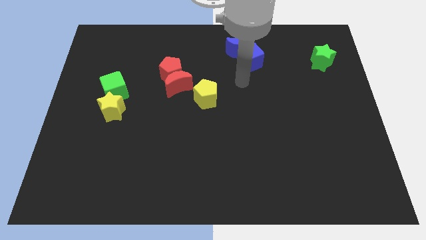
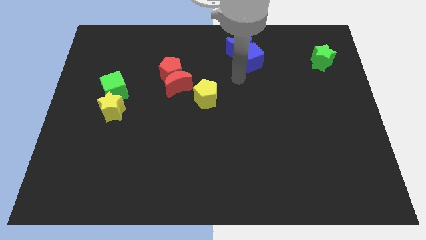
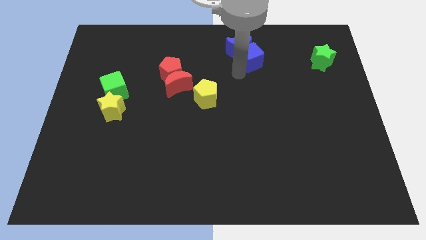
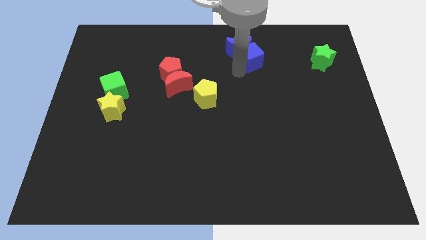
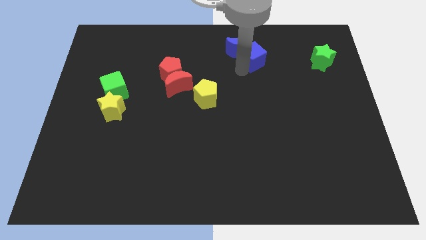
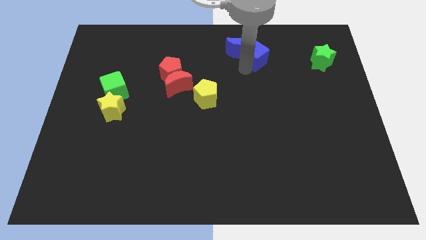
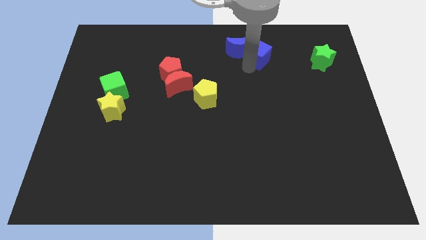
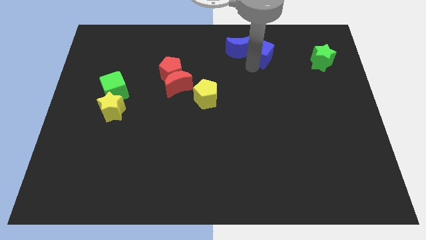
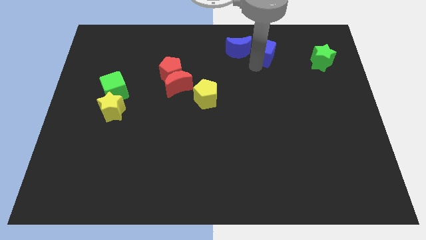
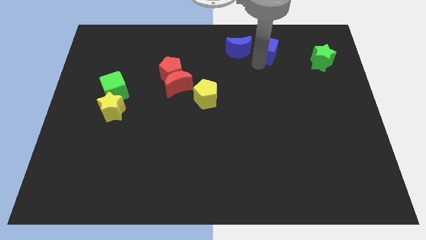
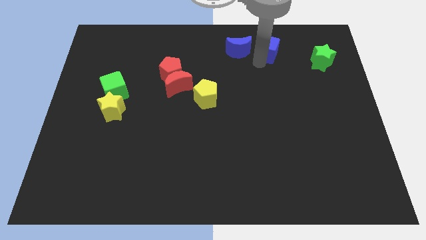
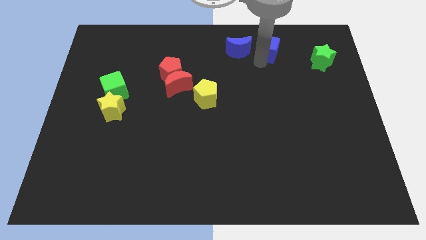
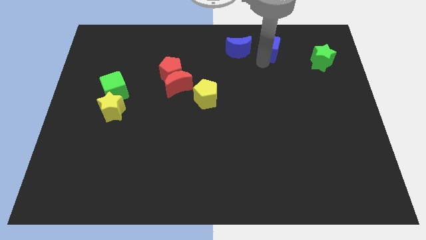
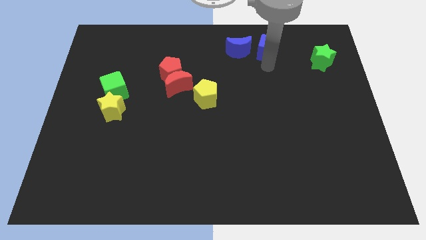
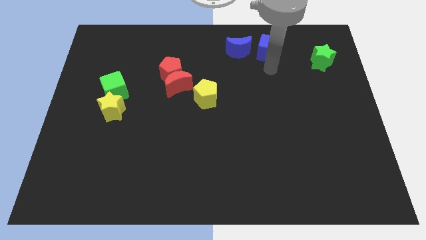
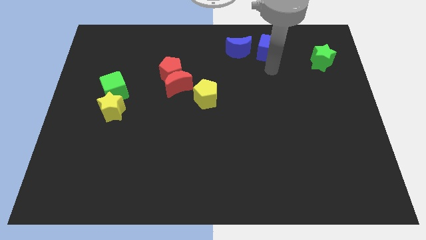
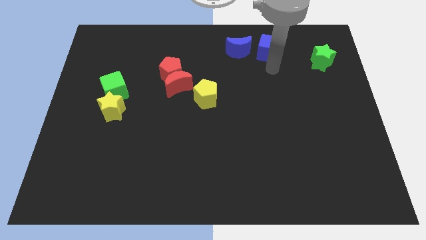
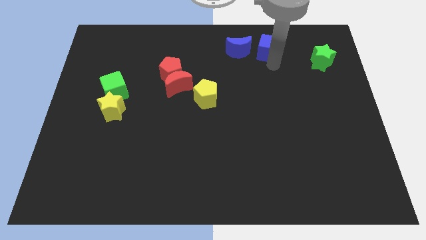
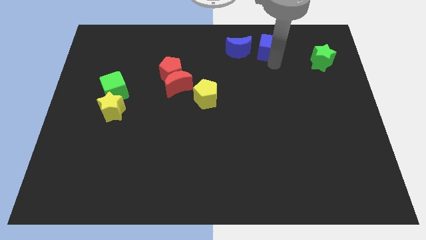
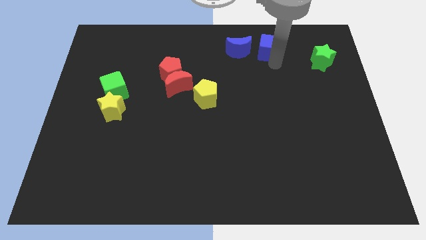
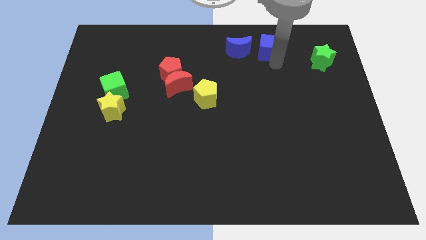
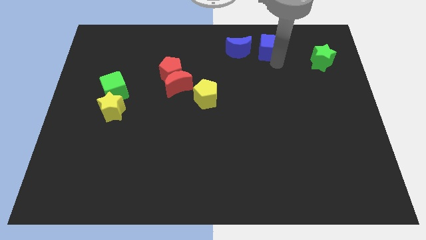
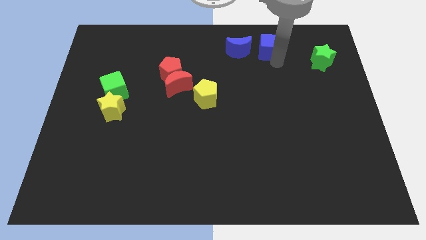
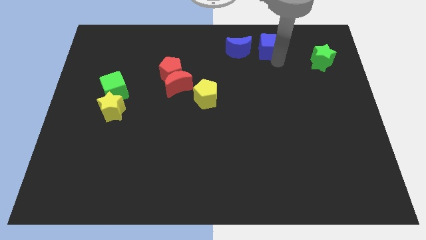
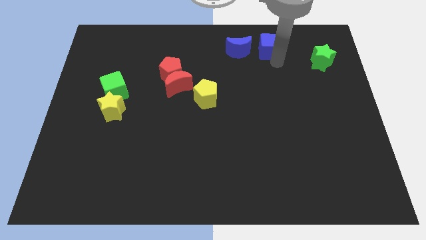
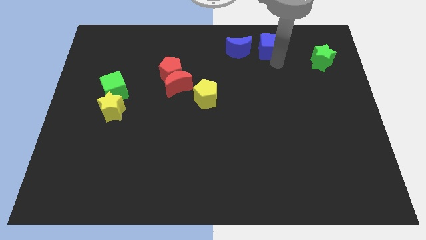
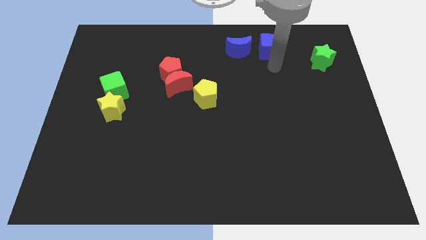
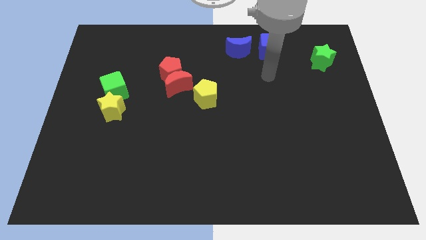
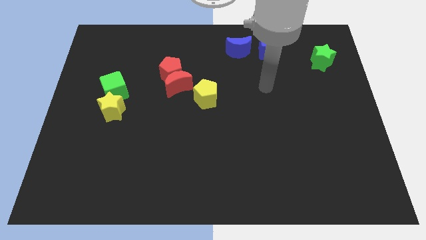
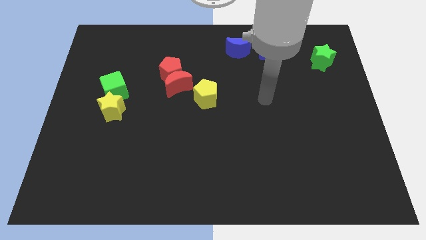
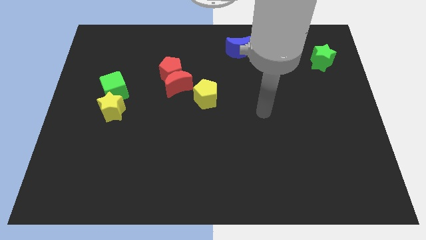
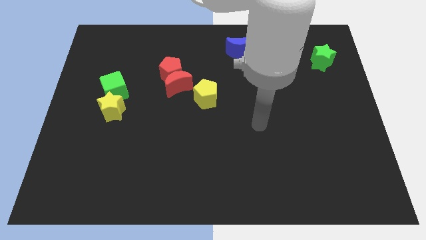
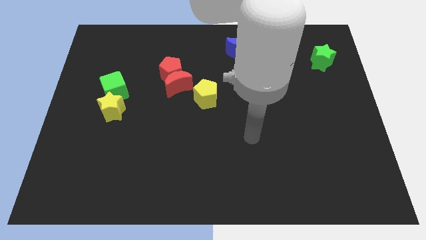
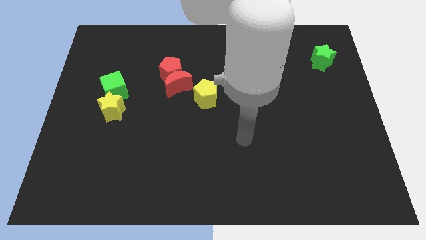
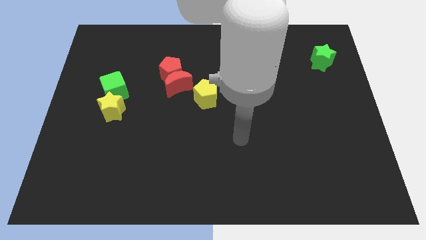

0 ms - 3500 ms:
separate blue cube from the blue crescent

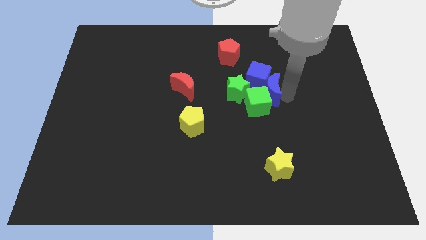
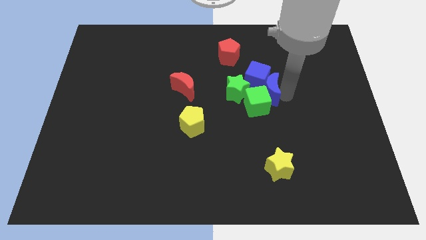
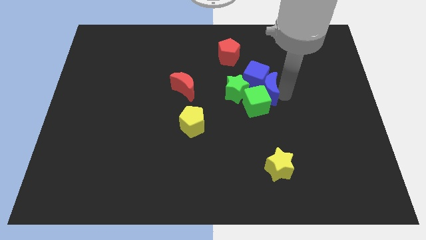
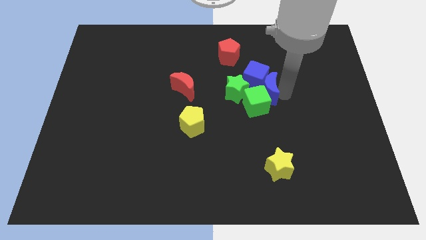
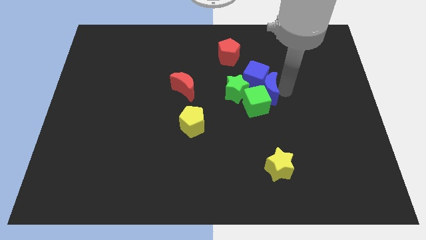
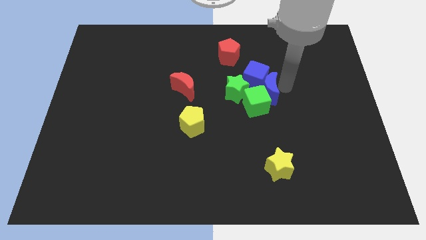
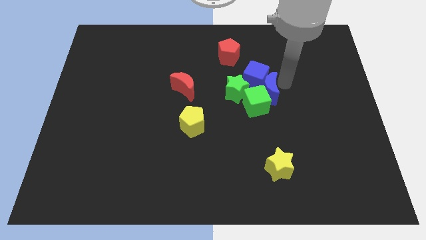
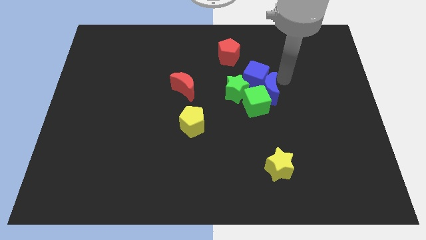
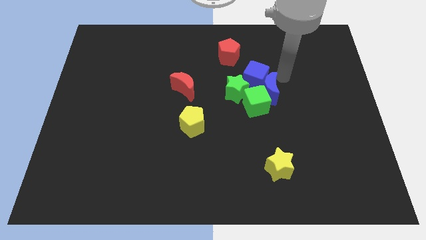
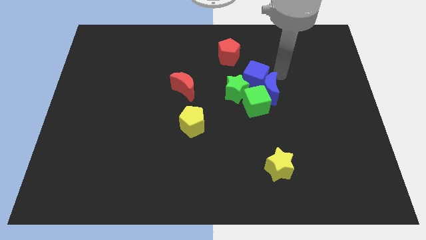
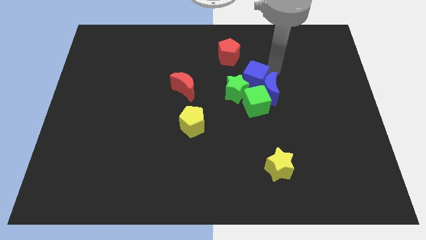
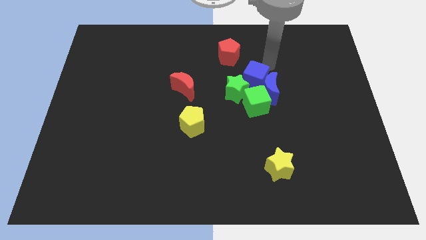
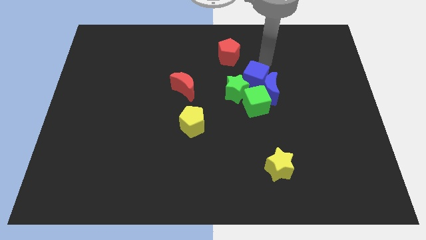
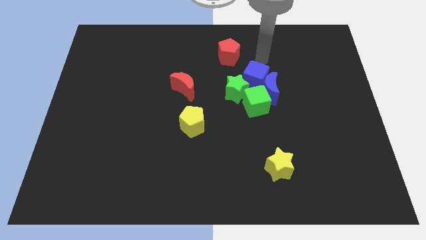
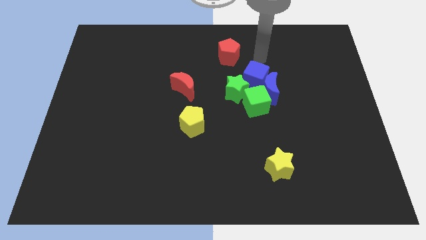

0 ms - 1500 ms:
move your arm away from the blue moon

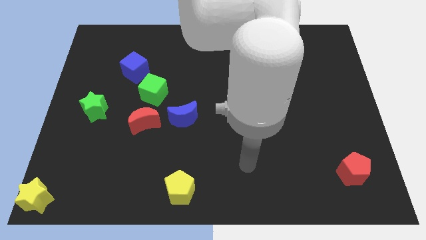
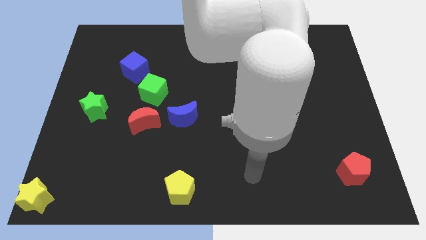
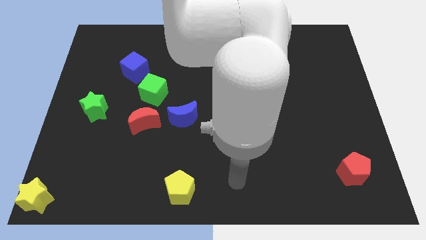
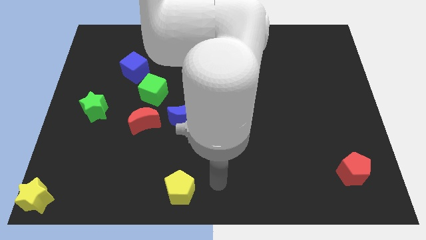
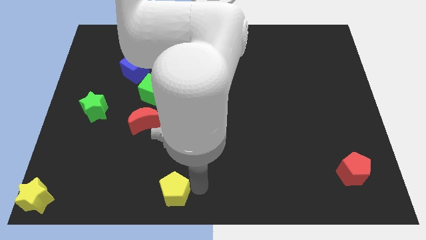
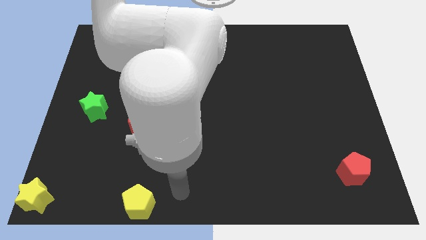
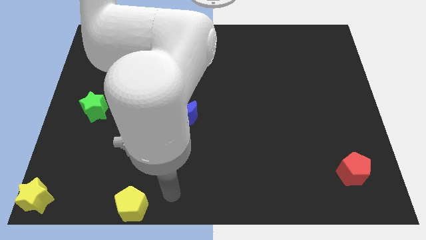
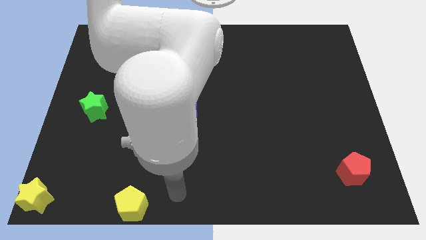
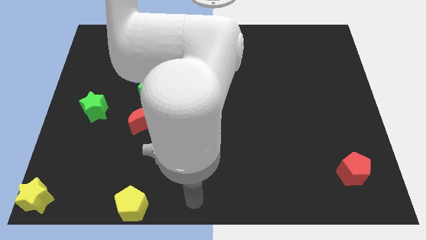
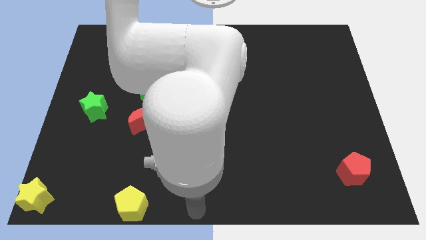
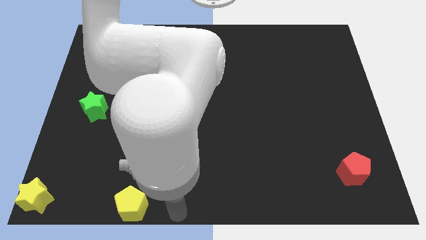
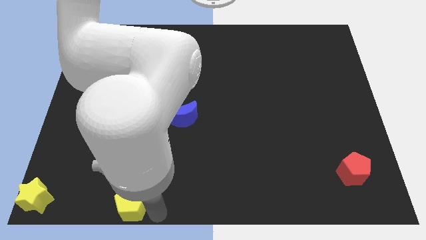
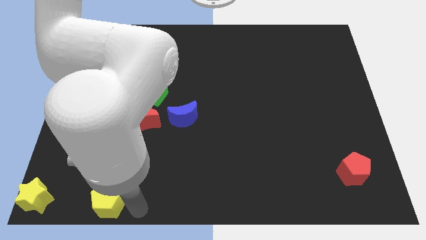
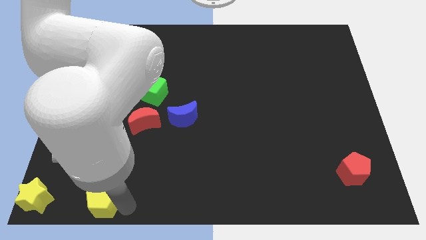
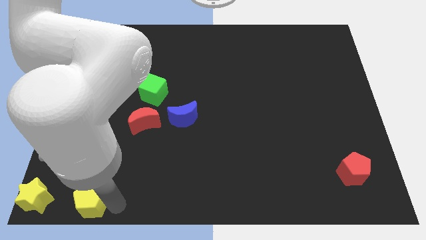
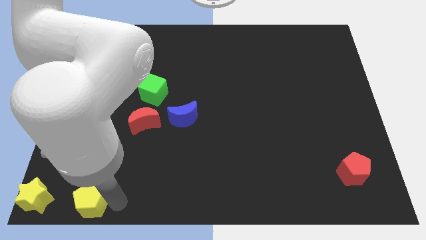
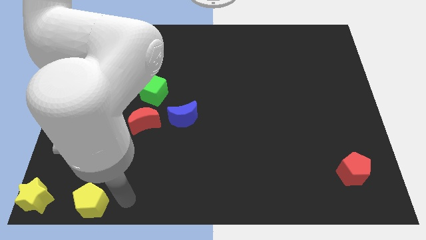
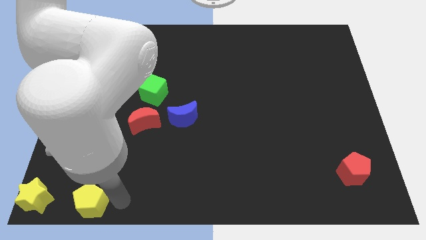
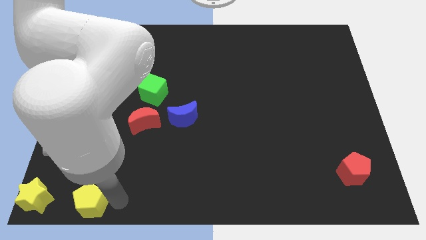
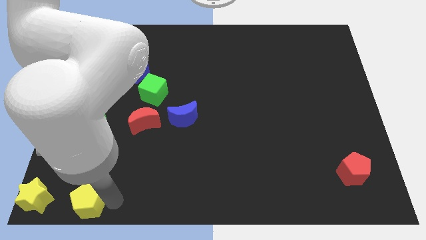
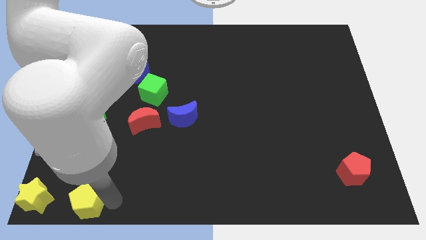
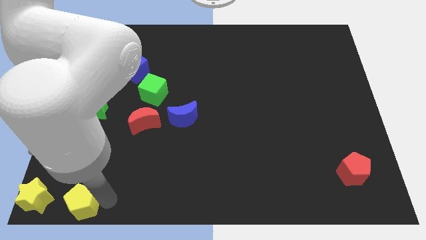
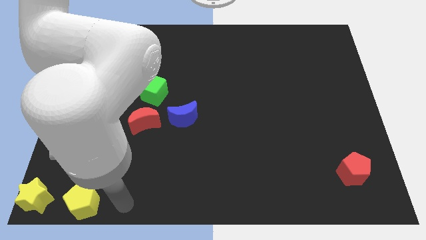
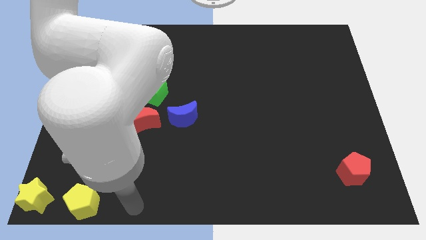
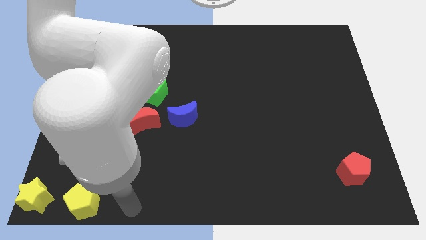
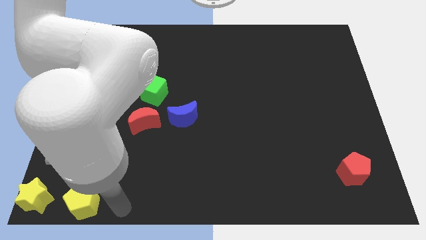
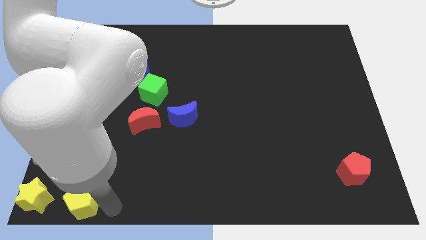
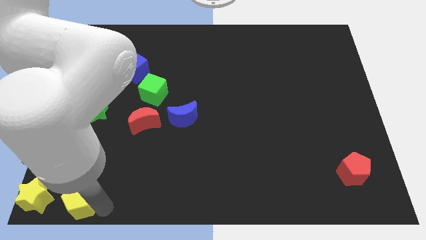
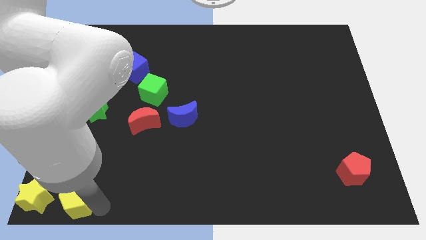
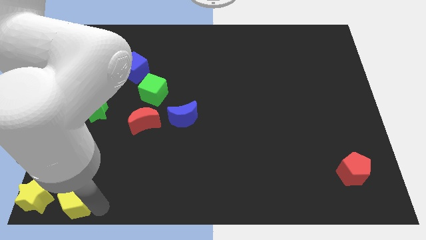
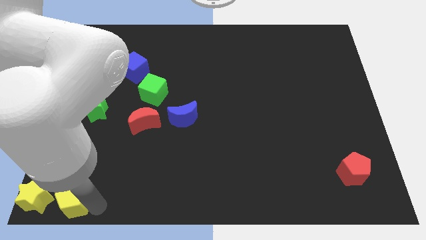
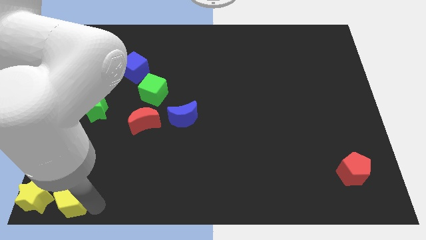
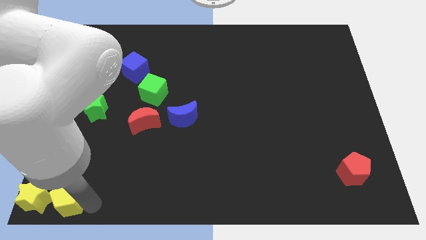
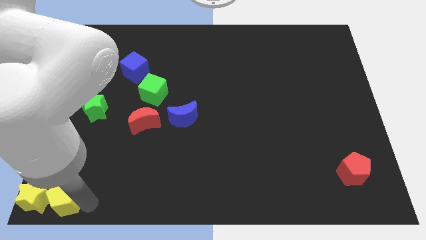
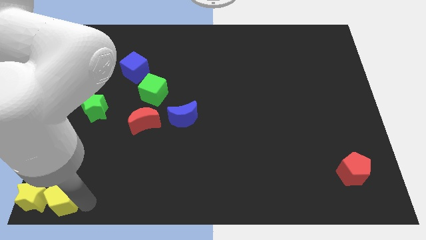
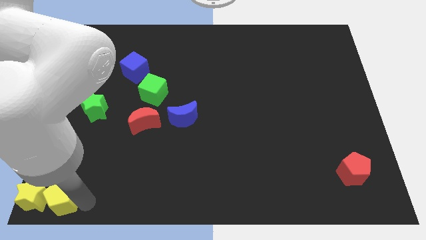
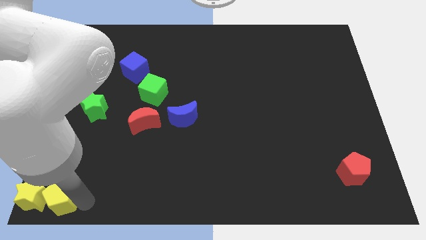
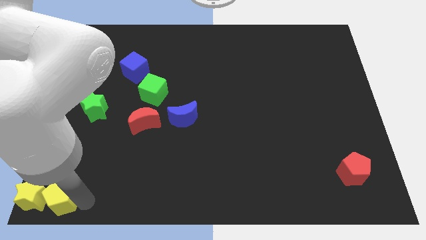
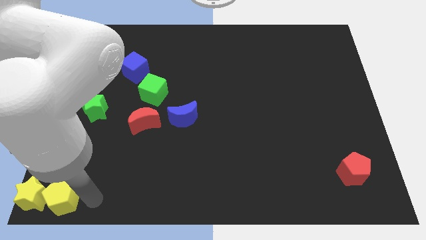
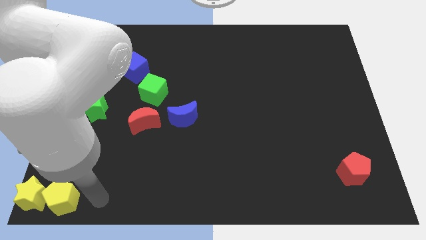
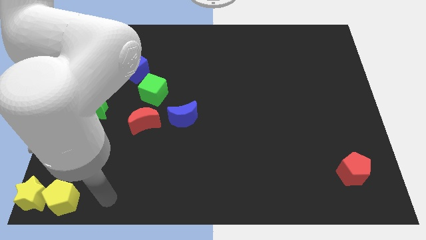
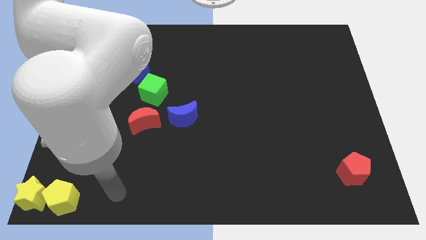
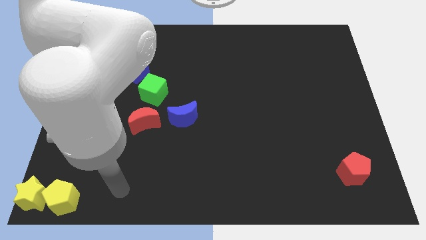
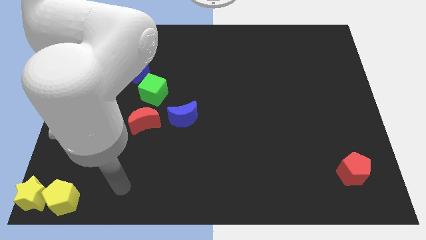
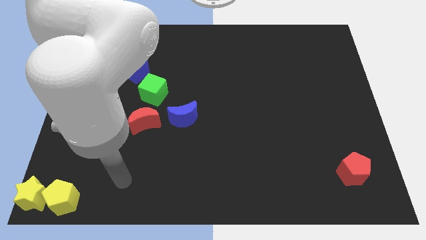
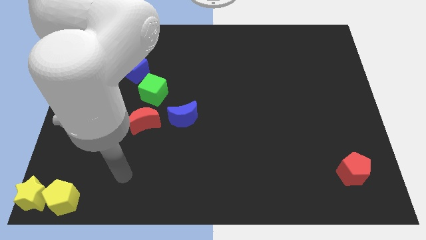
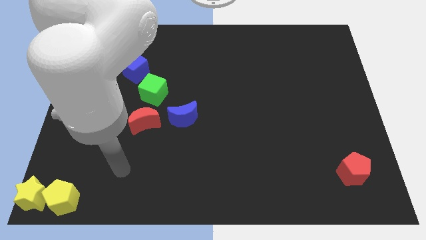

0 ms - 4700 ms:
push the yellow pentagon into the right side of the yellow star
